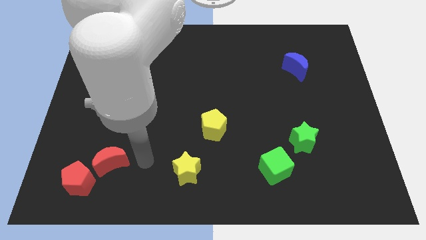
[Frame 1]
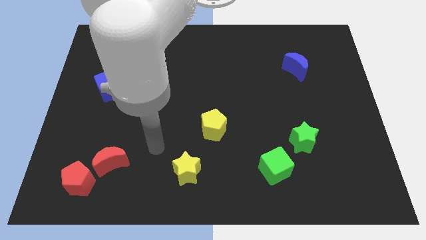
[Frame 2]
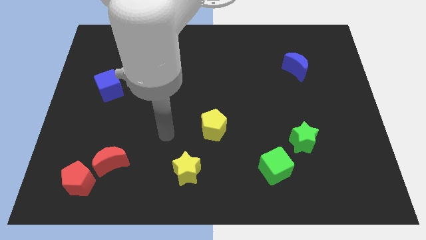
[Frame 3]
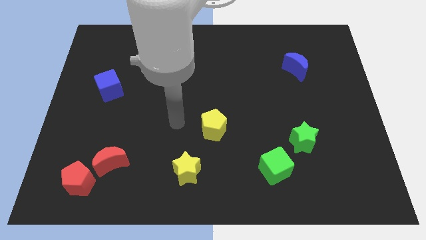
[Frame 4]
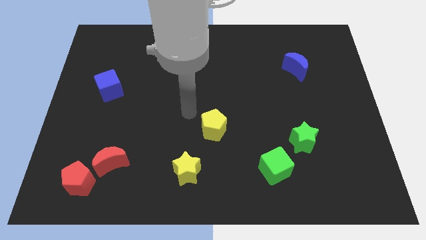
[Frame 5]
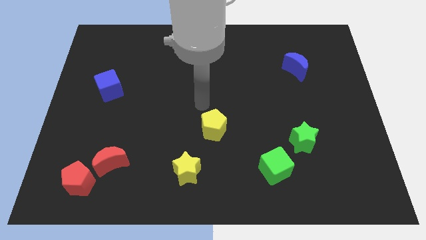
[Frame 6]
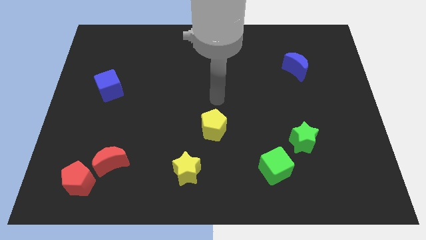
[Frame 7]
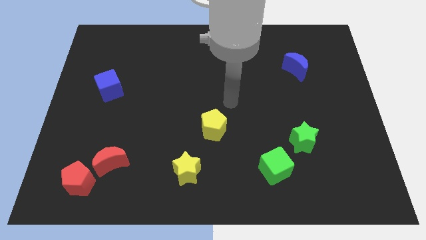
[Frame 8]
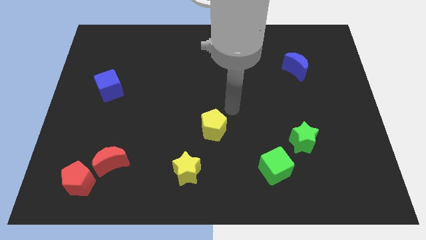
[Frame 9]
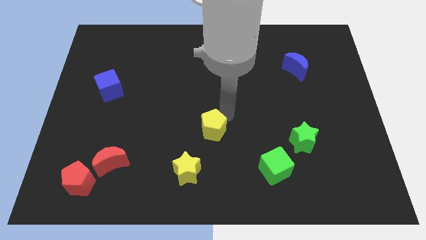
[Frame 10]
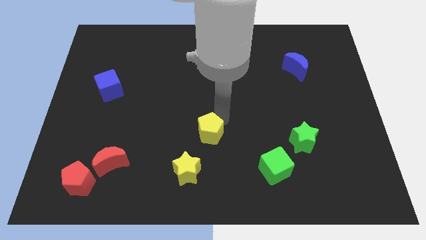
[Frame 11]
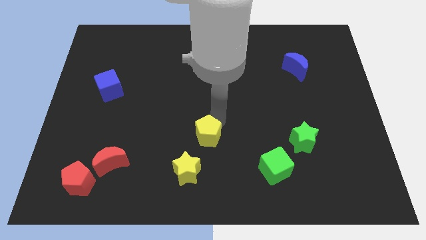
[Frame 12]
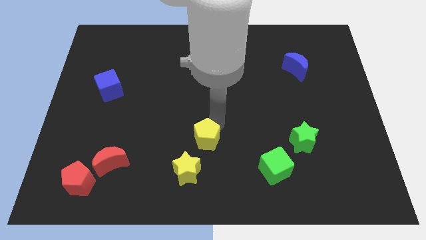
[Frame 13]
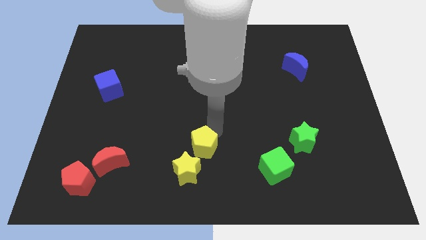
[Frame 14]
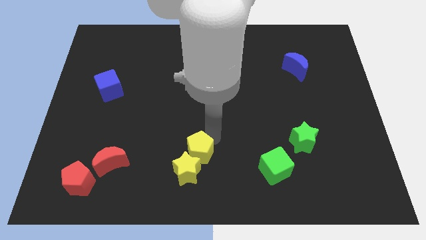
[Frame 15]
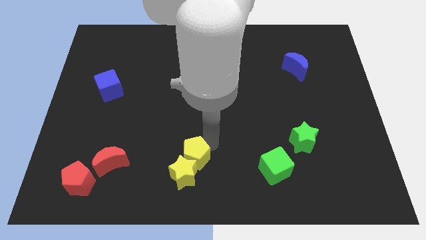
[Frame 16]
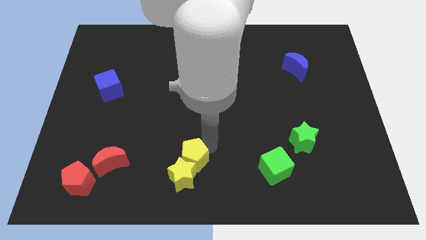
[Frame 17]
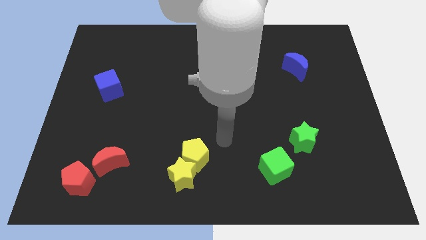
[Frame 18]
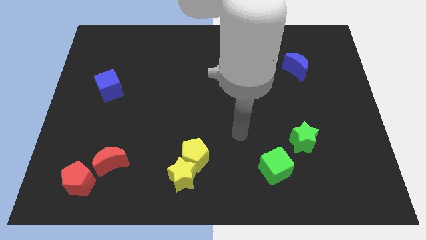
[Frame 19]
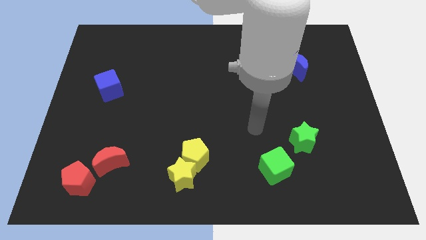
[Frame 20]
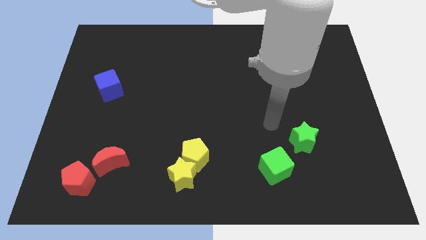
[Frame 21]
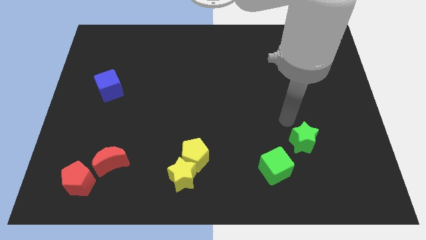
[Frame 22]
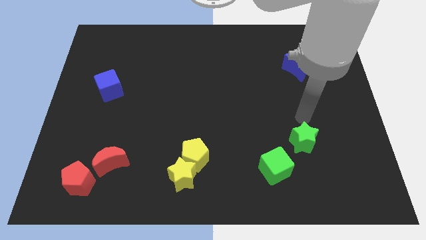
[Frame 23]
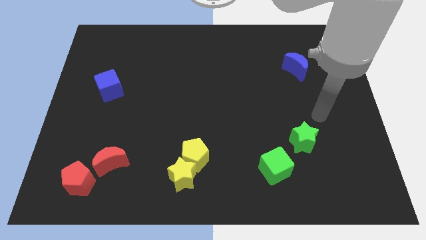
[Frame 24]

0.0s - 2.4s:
move the yellow pentagon into yellow star

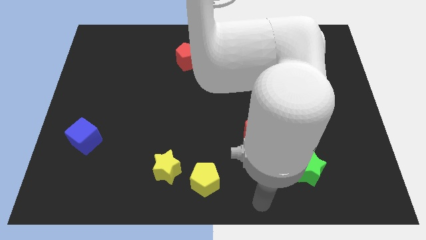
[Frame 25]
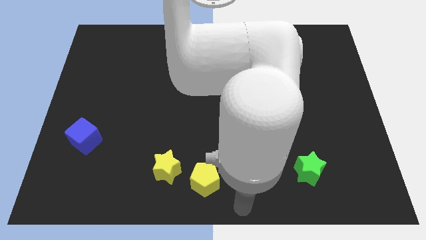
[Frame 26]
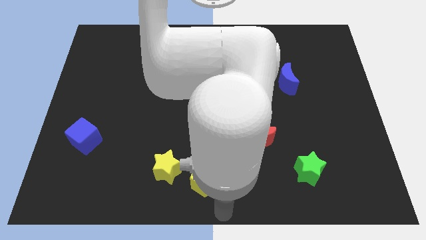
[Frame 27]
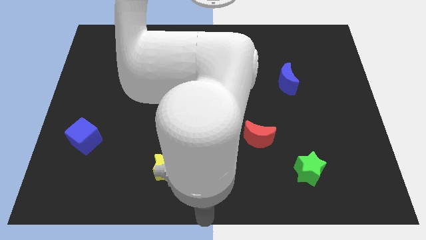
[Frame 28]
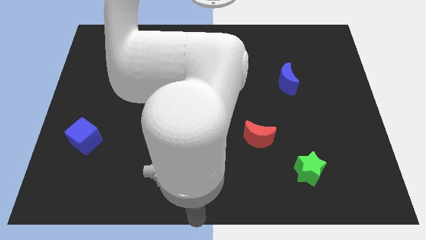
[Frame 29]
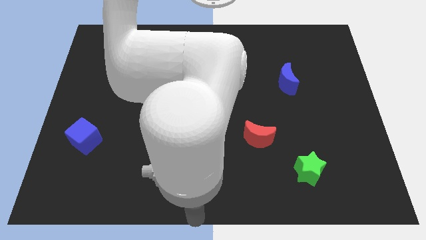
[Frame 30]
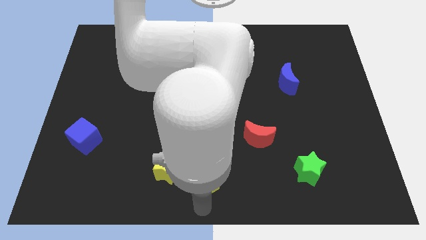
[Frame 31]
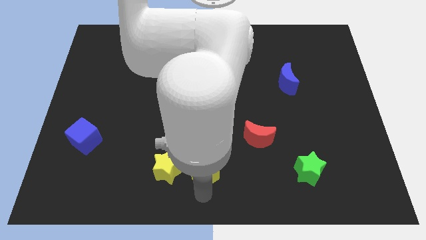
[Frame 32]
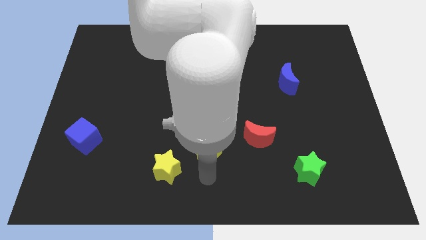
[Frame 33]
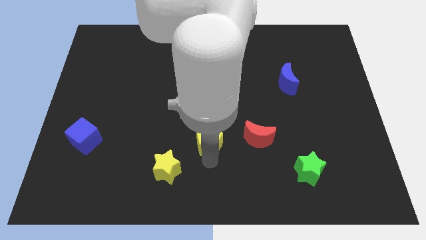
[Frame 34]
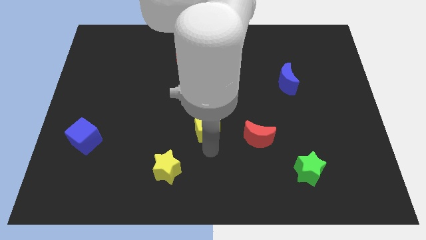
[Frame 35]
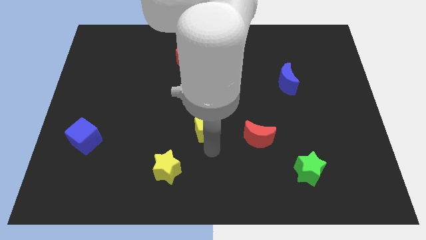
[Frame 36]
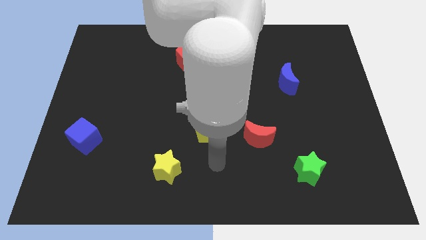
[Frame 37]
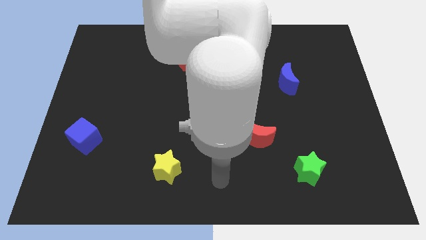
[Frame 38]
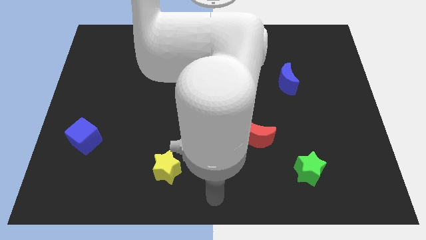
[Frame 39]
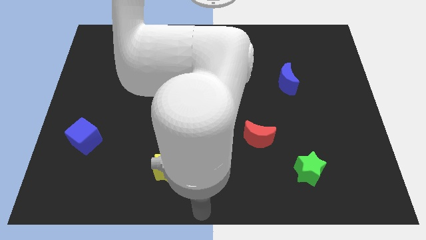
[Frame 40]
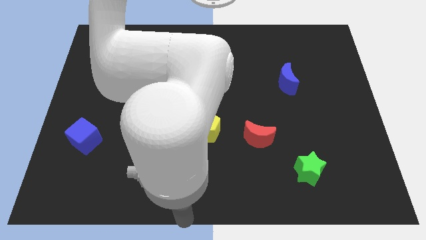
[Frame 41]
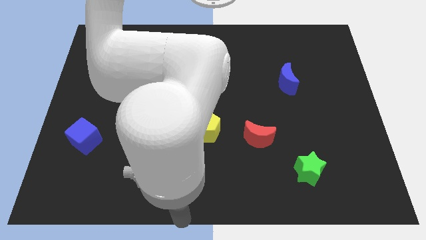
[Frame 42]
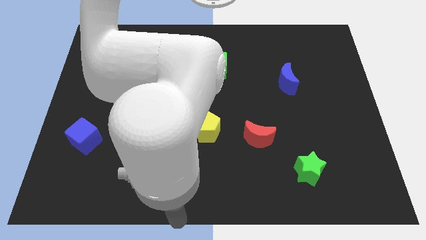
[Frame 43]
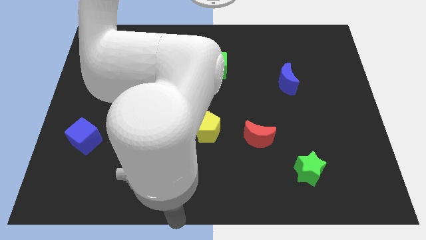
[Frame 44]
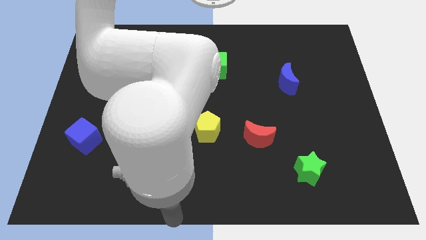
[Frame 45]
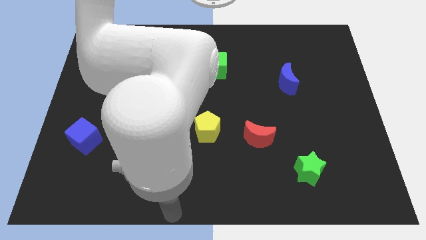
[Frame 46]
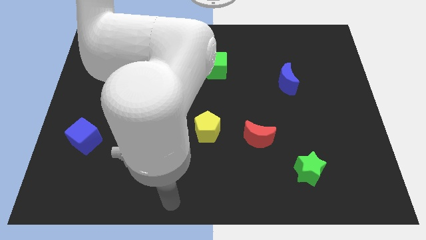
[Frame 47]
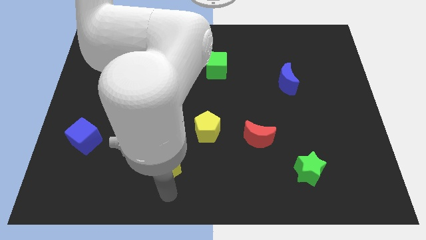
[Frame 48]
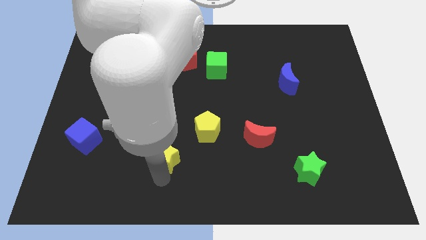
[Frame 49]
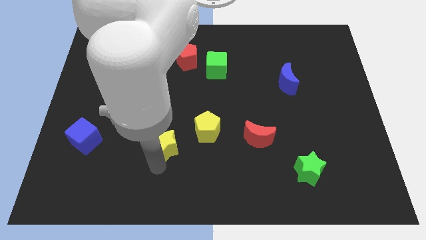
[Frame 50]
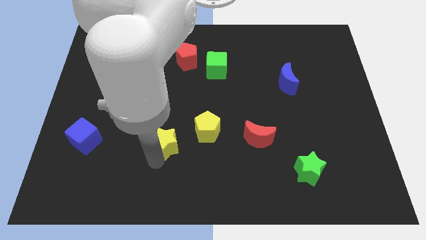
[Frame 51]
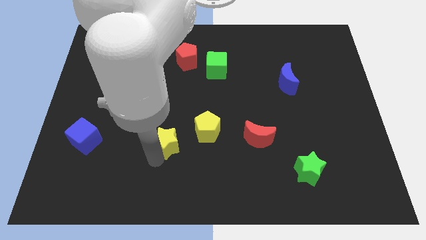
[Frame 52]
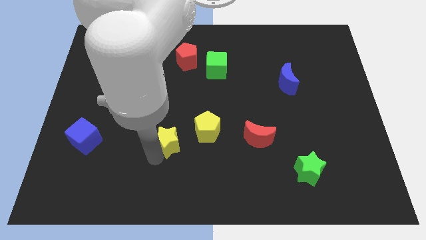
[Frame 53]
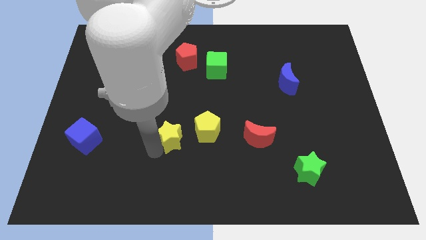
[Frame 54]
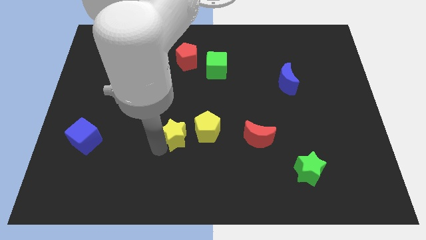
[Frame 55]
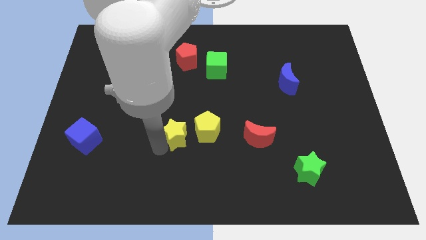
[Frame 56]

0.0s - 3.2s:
slide the yellow pentagon and the yellow star towards the center

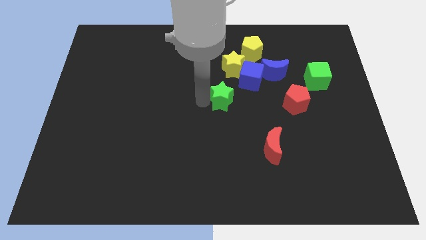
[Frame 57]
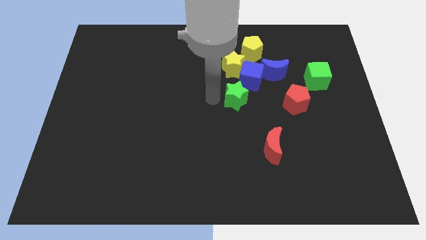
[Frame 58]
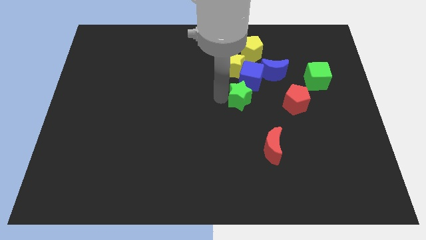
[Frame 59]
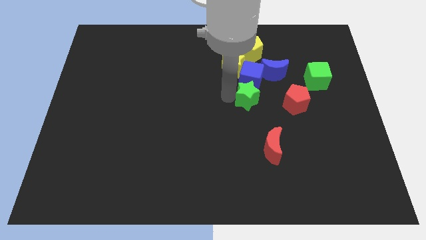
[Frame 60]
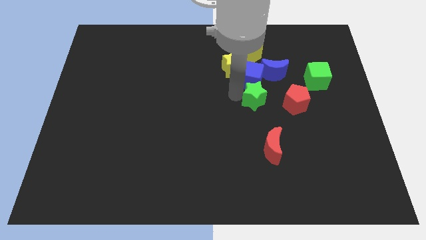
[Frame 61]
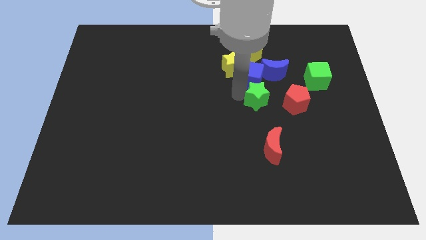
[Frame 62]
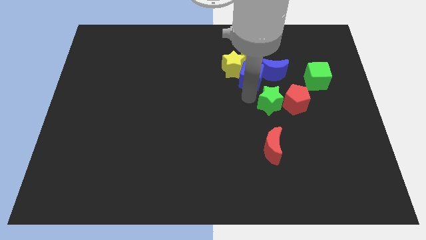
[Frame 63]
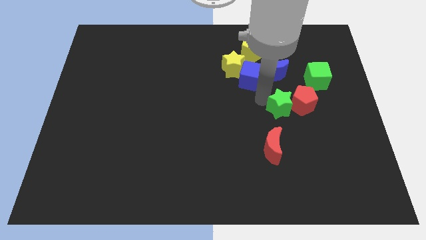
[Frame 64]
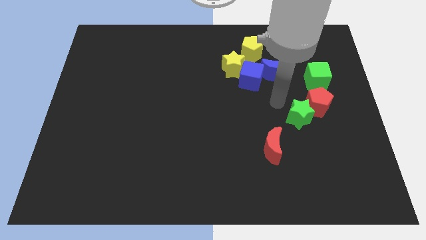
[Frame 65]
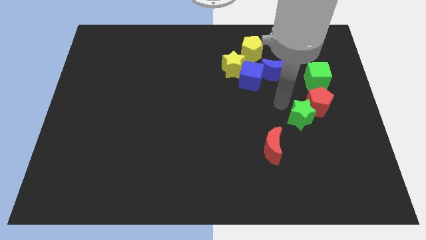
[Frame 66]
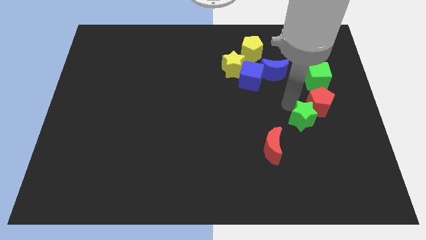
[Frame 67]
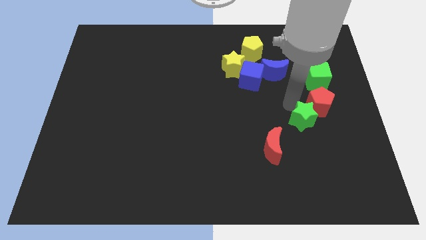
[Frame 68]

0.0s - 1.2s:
push the green star into the red pentagon

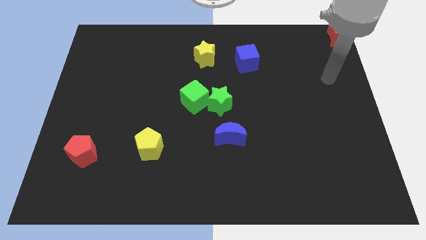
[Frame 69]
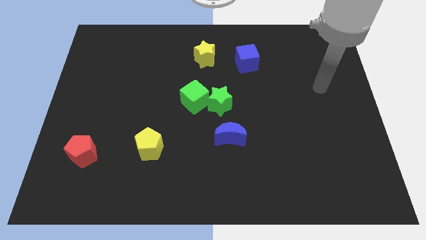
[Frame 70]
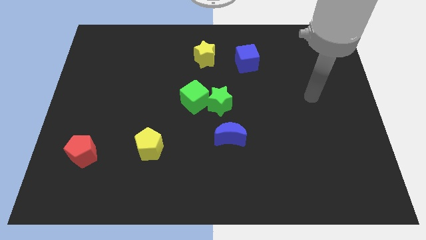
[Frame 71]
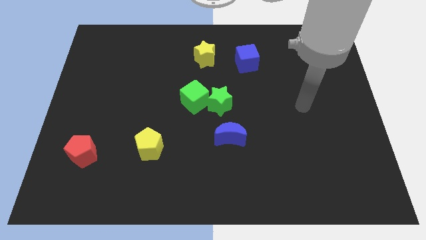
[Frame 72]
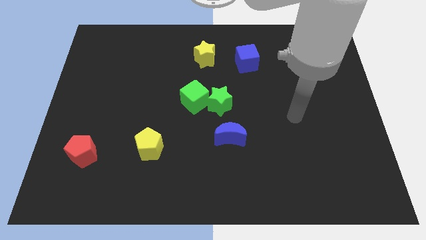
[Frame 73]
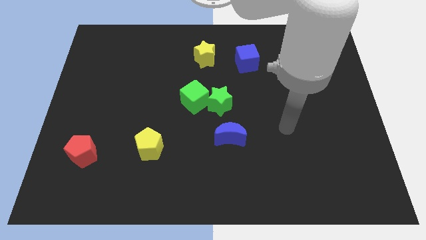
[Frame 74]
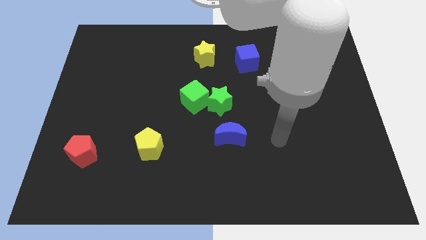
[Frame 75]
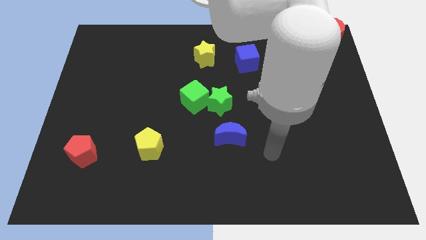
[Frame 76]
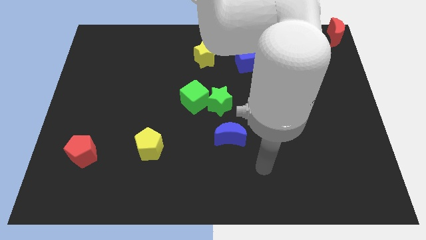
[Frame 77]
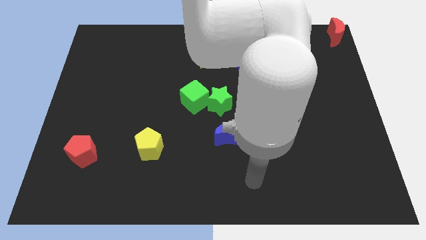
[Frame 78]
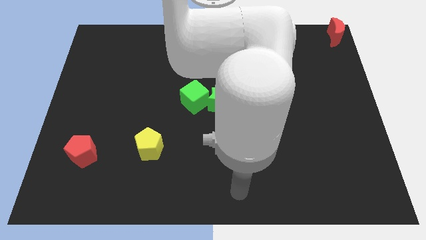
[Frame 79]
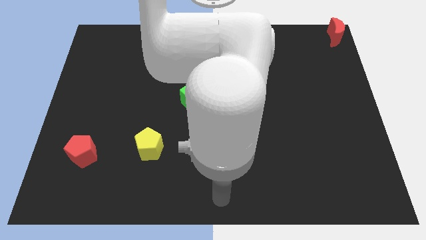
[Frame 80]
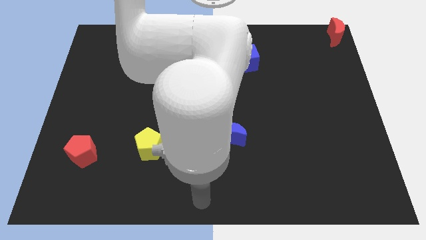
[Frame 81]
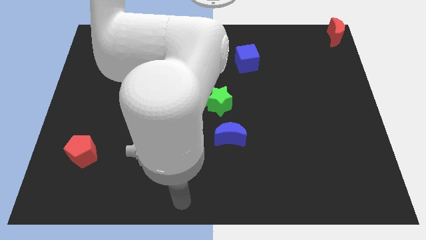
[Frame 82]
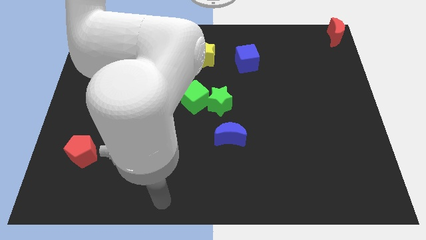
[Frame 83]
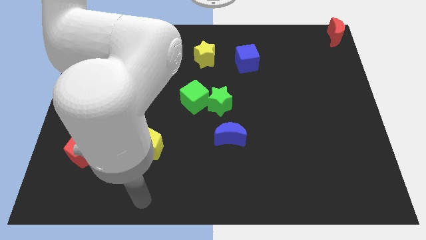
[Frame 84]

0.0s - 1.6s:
place your hand below the yellow pentagon

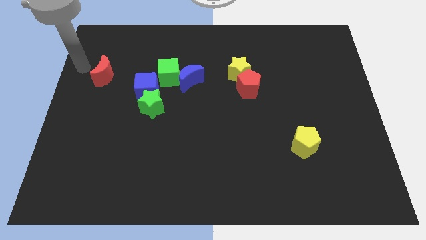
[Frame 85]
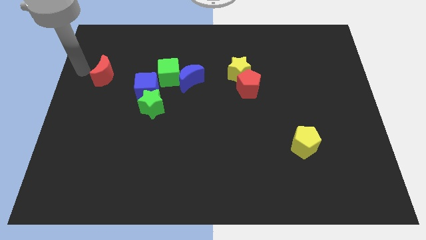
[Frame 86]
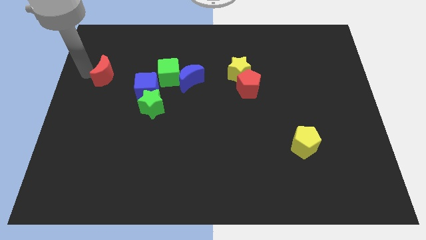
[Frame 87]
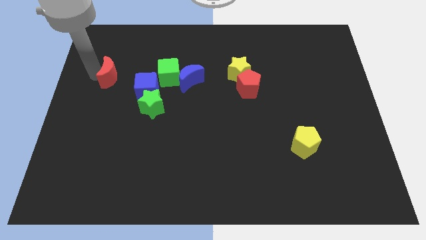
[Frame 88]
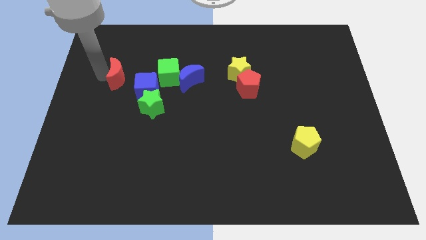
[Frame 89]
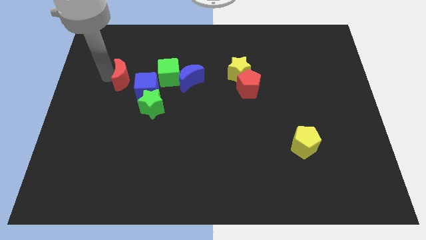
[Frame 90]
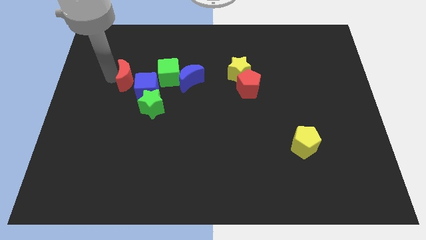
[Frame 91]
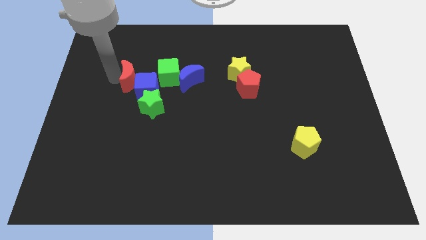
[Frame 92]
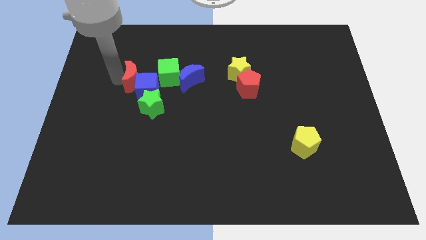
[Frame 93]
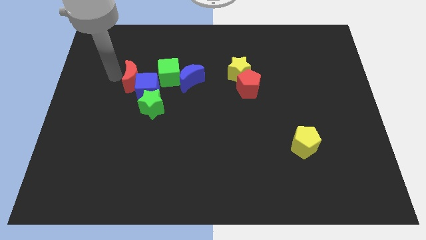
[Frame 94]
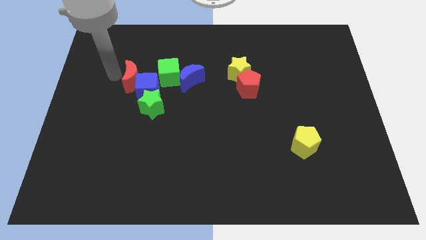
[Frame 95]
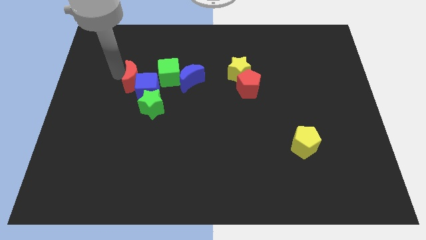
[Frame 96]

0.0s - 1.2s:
push the red moon into the blue cube
